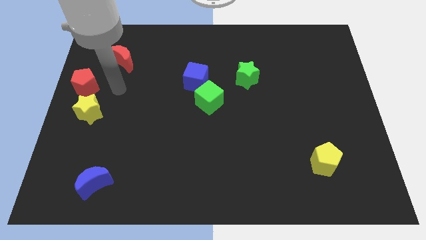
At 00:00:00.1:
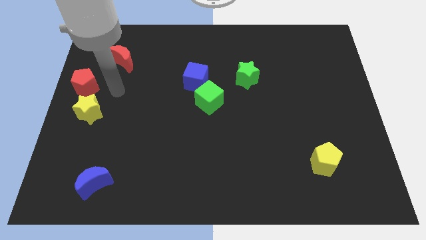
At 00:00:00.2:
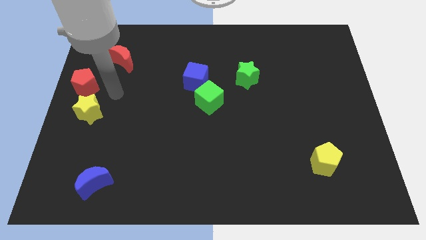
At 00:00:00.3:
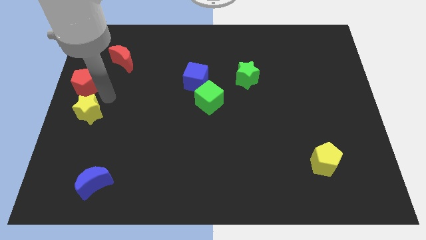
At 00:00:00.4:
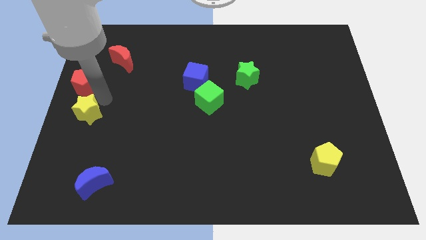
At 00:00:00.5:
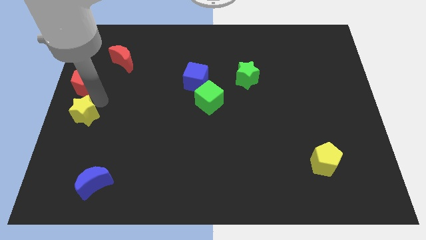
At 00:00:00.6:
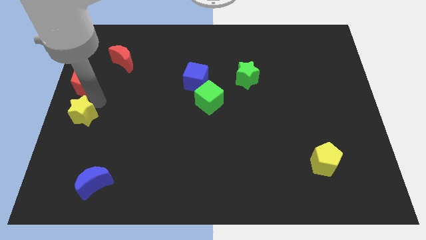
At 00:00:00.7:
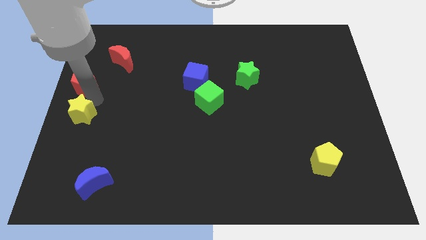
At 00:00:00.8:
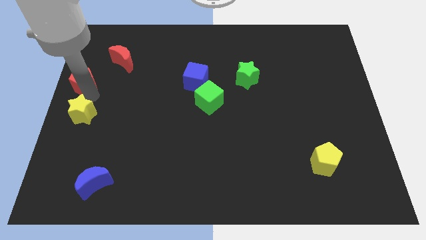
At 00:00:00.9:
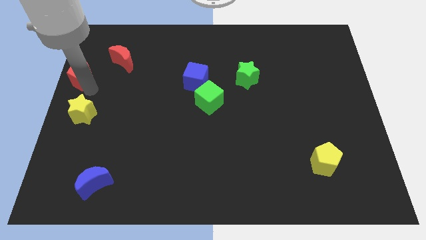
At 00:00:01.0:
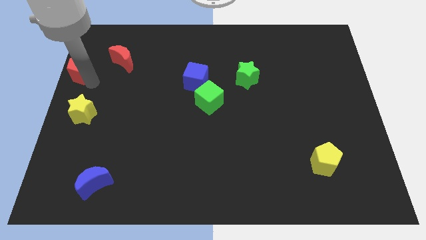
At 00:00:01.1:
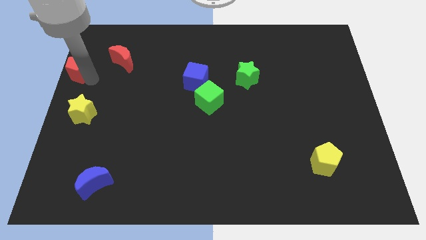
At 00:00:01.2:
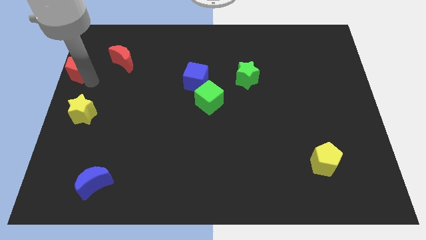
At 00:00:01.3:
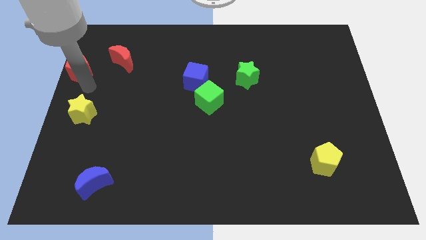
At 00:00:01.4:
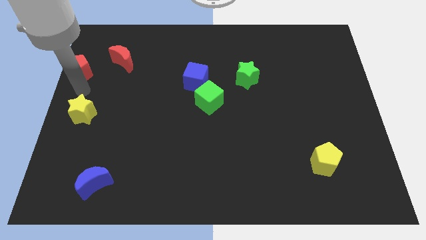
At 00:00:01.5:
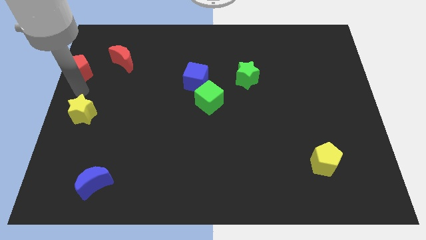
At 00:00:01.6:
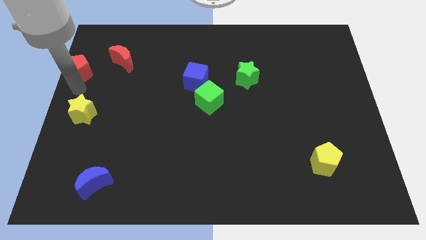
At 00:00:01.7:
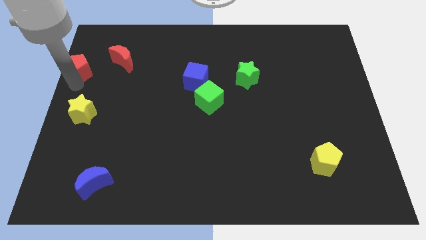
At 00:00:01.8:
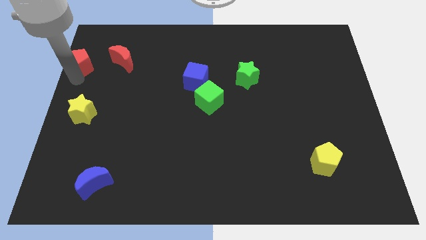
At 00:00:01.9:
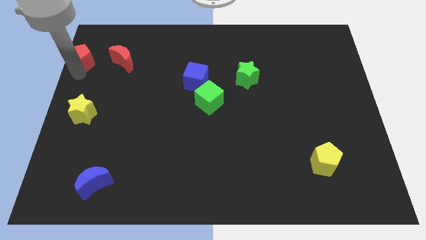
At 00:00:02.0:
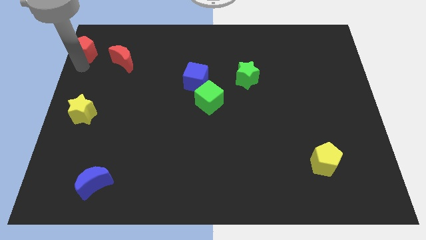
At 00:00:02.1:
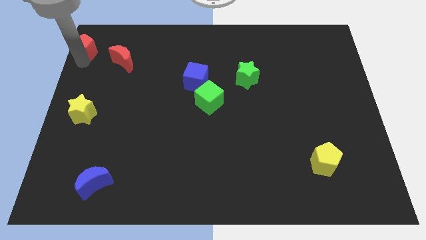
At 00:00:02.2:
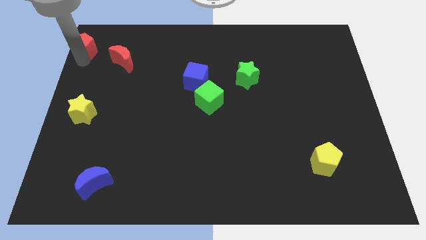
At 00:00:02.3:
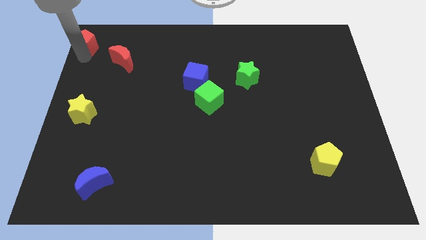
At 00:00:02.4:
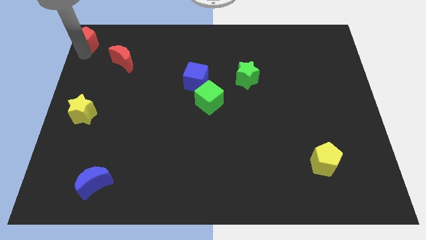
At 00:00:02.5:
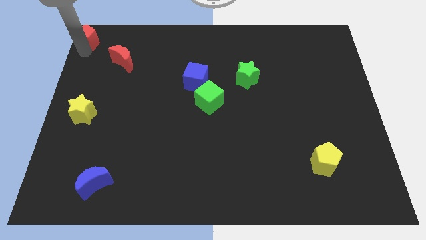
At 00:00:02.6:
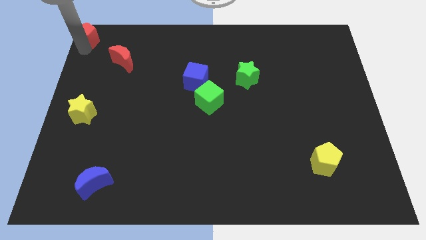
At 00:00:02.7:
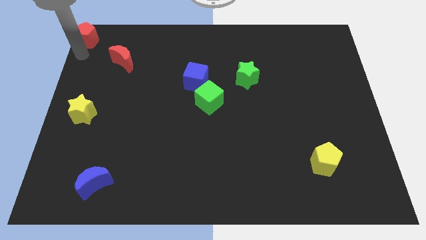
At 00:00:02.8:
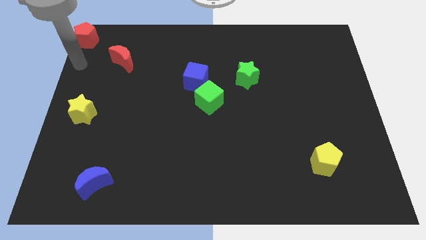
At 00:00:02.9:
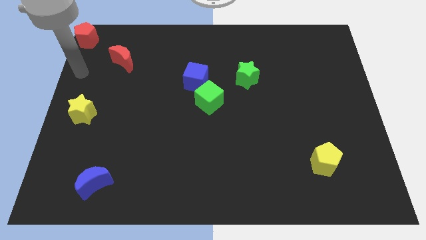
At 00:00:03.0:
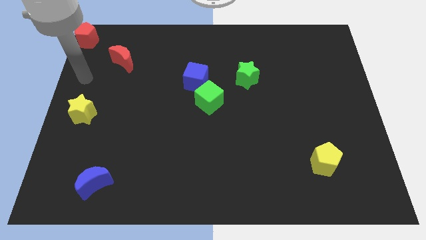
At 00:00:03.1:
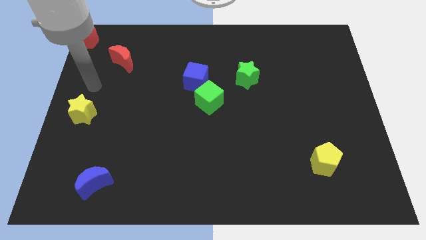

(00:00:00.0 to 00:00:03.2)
place red pentagon on the top left corner of the board

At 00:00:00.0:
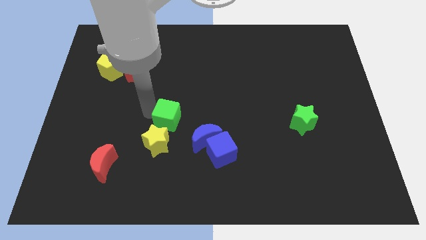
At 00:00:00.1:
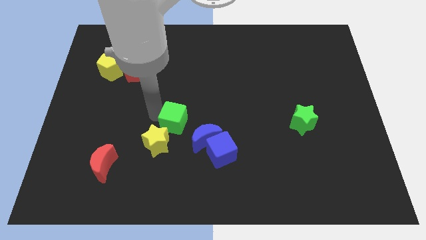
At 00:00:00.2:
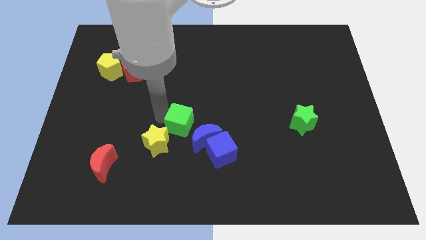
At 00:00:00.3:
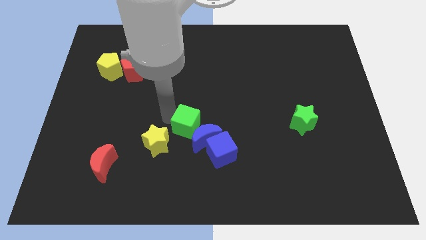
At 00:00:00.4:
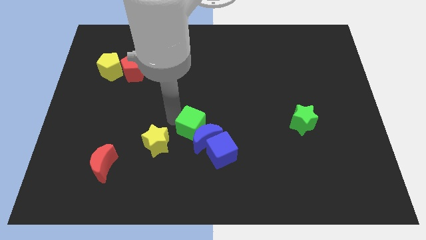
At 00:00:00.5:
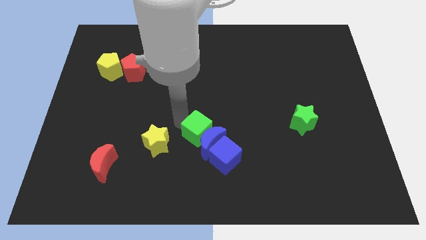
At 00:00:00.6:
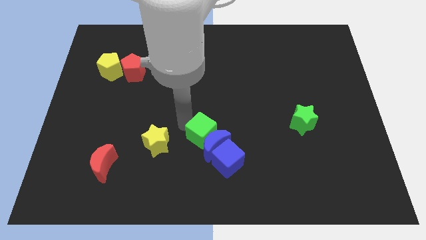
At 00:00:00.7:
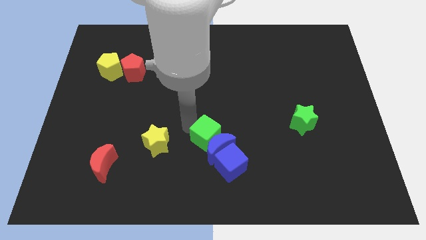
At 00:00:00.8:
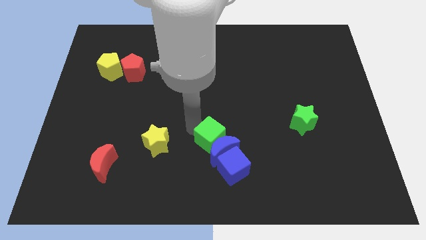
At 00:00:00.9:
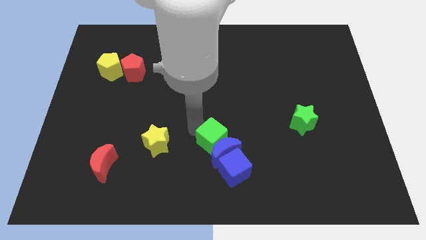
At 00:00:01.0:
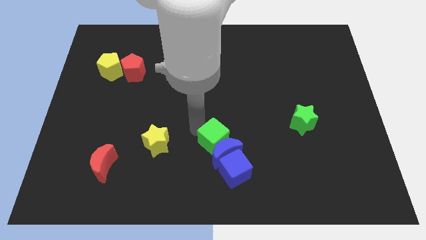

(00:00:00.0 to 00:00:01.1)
slide the green cube into the blue blocks

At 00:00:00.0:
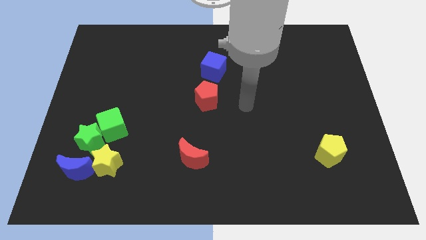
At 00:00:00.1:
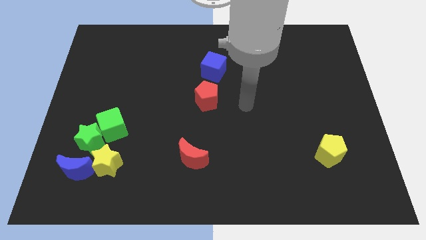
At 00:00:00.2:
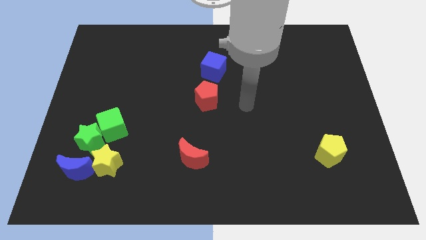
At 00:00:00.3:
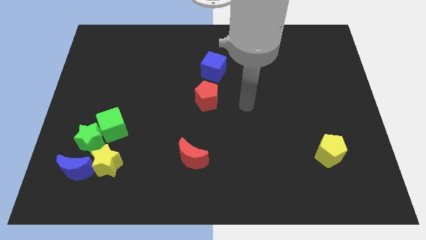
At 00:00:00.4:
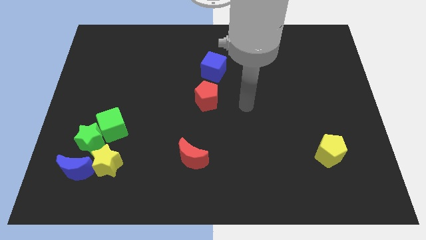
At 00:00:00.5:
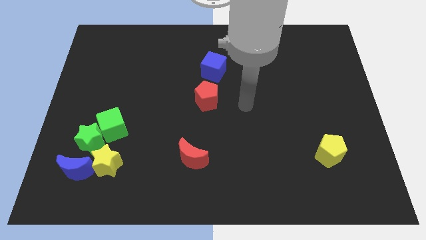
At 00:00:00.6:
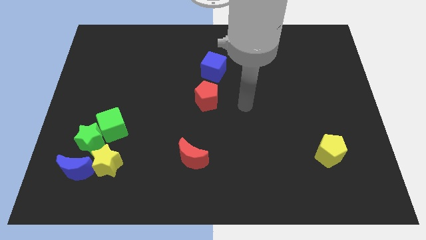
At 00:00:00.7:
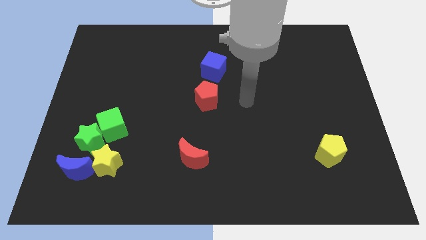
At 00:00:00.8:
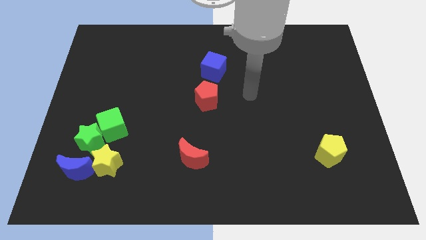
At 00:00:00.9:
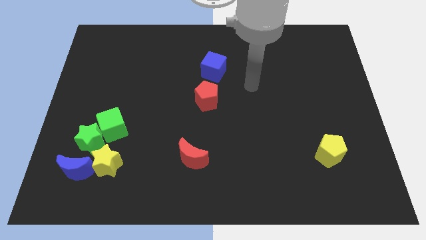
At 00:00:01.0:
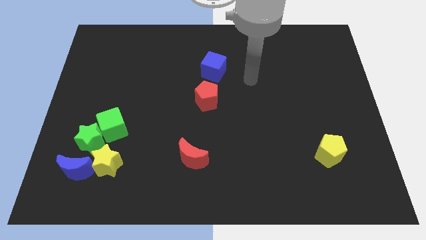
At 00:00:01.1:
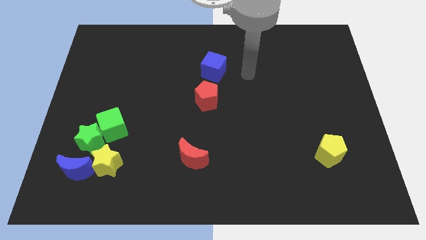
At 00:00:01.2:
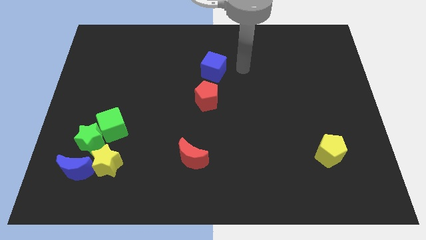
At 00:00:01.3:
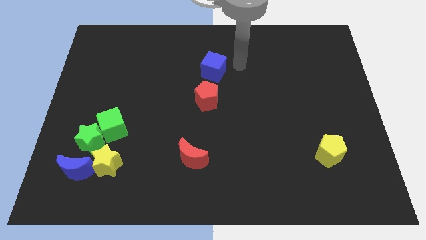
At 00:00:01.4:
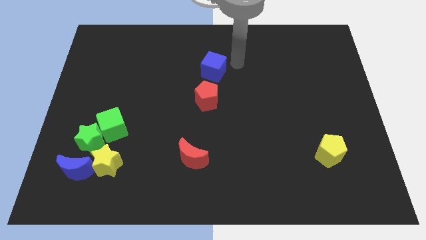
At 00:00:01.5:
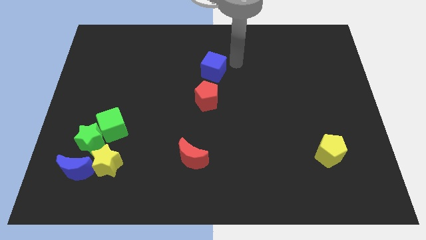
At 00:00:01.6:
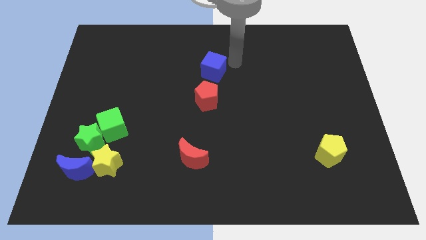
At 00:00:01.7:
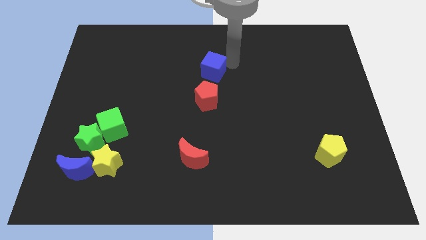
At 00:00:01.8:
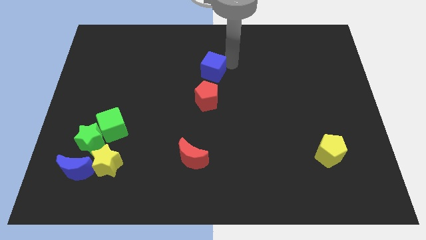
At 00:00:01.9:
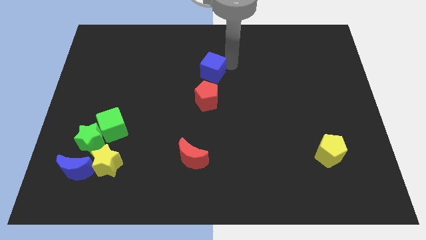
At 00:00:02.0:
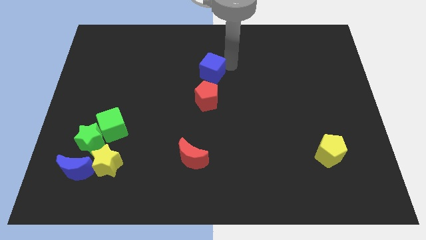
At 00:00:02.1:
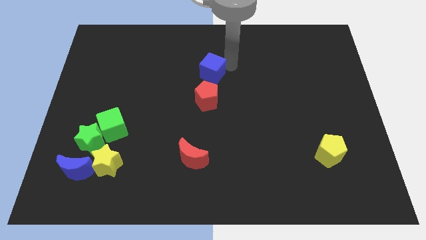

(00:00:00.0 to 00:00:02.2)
tap on the top right side of the blue cube

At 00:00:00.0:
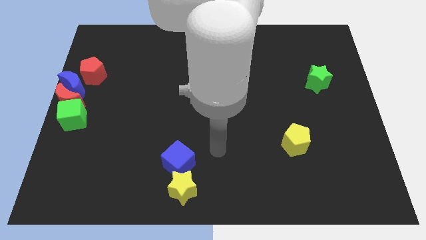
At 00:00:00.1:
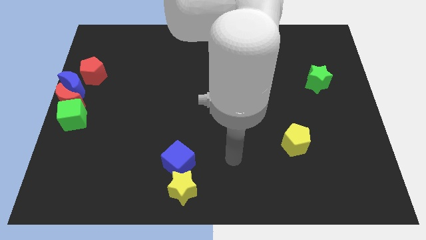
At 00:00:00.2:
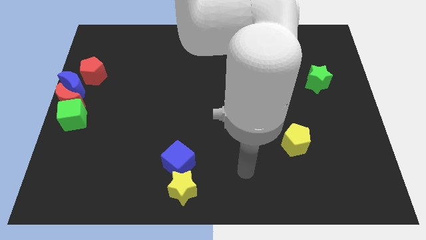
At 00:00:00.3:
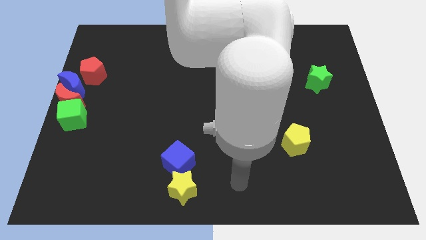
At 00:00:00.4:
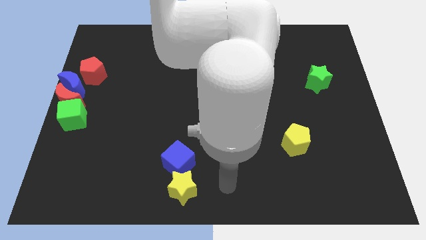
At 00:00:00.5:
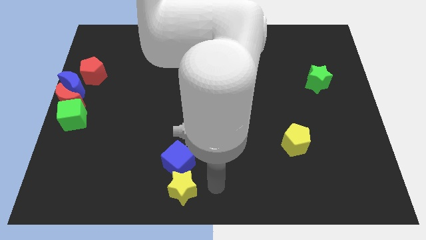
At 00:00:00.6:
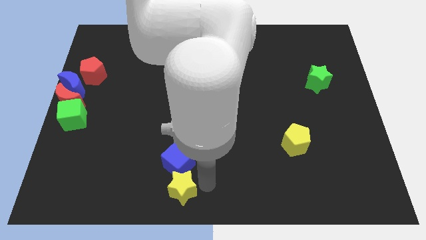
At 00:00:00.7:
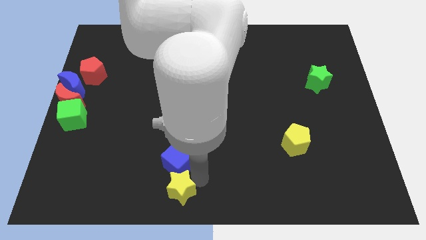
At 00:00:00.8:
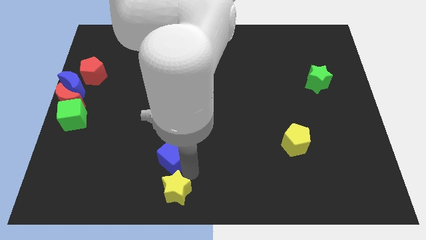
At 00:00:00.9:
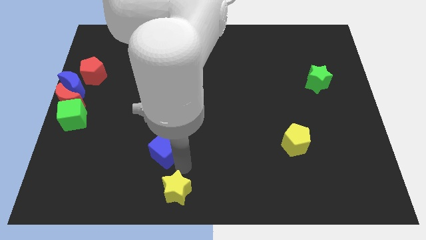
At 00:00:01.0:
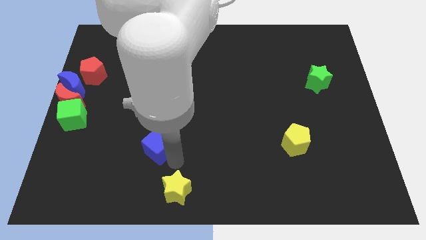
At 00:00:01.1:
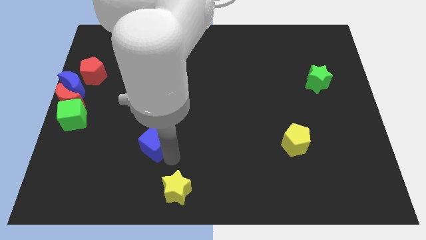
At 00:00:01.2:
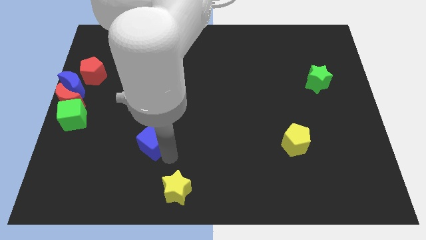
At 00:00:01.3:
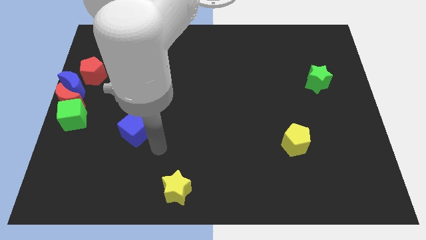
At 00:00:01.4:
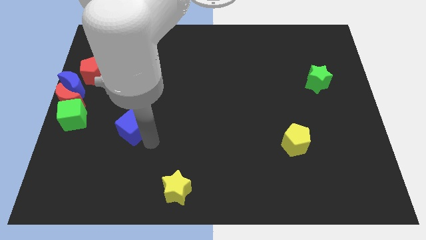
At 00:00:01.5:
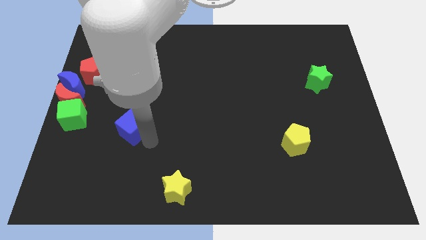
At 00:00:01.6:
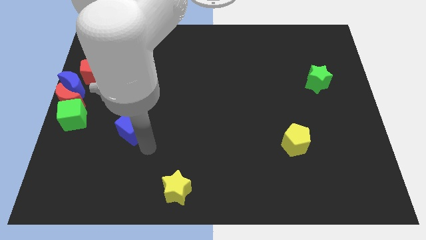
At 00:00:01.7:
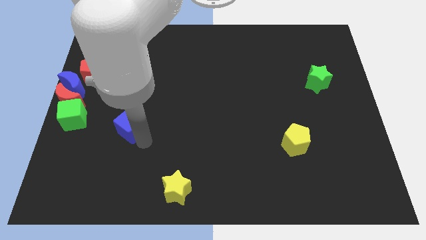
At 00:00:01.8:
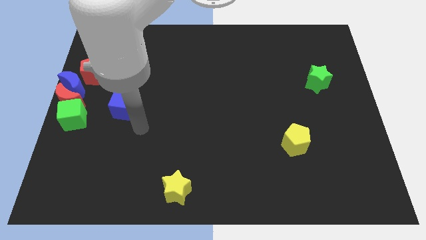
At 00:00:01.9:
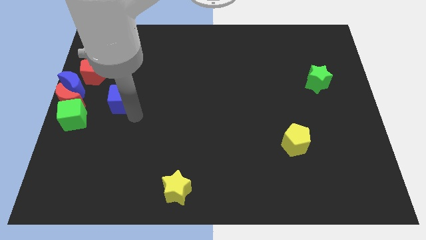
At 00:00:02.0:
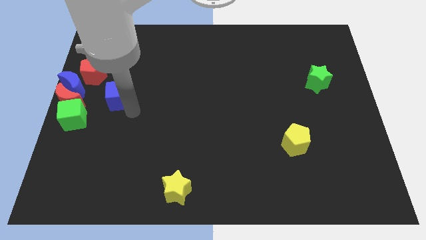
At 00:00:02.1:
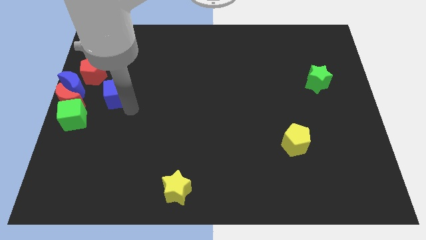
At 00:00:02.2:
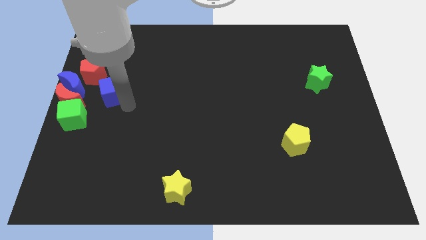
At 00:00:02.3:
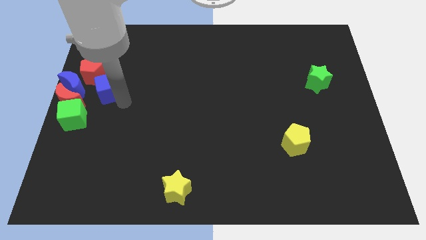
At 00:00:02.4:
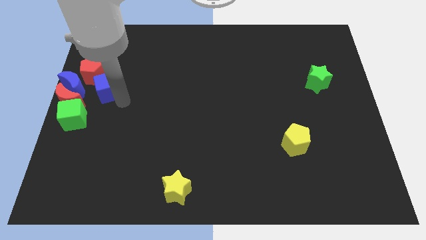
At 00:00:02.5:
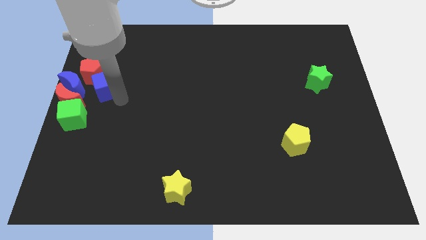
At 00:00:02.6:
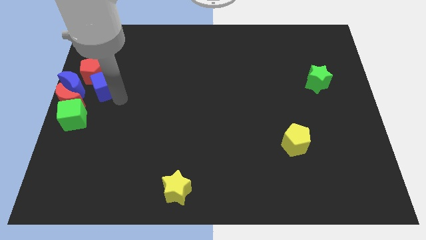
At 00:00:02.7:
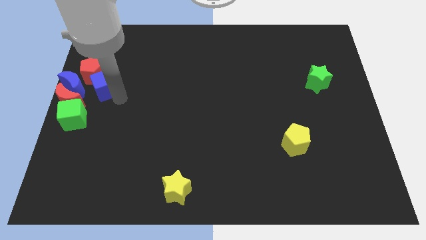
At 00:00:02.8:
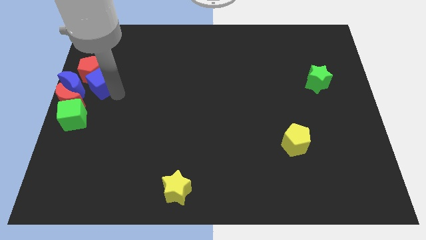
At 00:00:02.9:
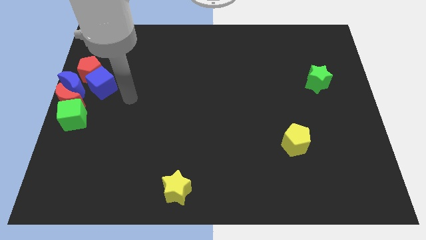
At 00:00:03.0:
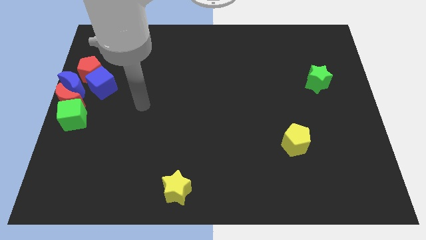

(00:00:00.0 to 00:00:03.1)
separate blue cube from yellow star
